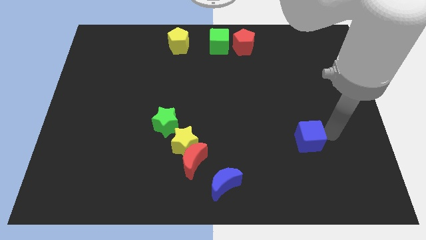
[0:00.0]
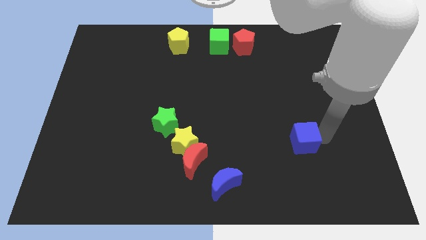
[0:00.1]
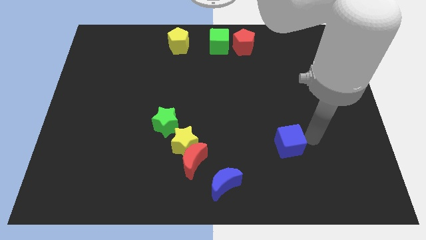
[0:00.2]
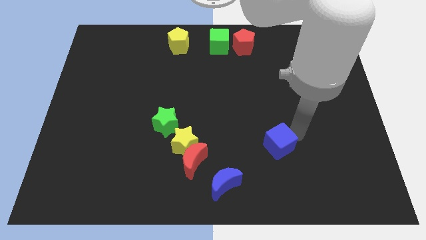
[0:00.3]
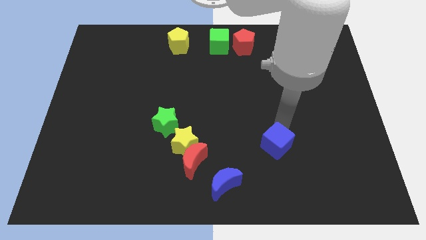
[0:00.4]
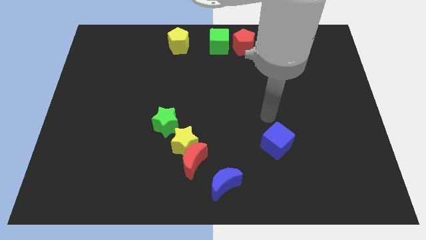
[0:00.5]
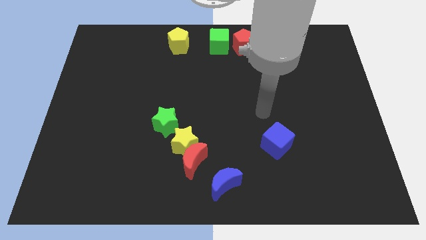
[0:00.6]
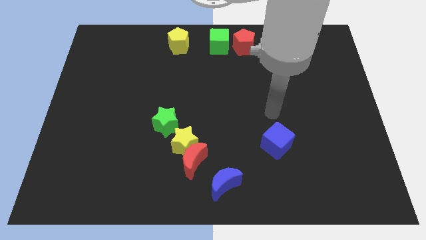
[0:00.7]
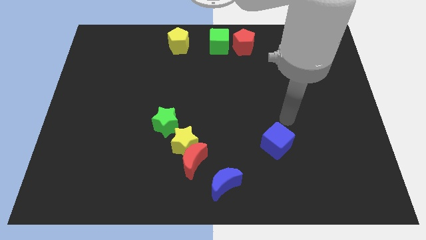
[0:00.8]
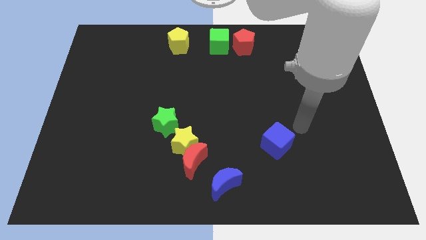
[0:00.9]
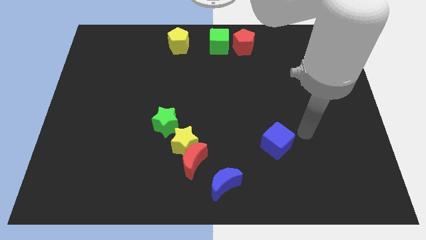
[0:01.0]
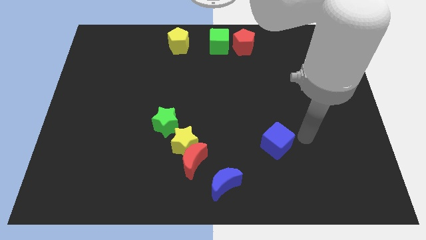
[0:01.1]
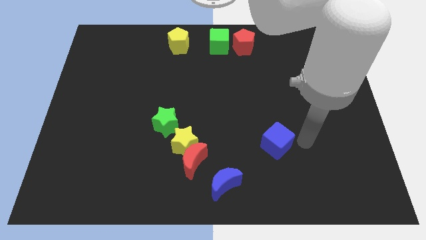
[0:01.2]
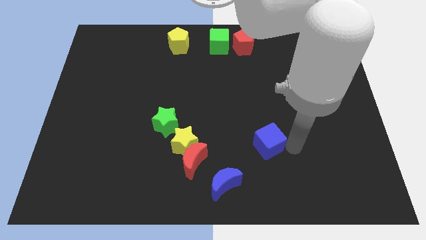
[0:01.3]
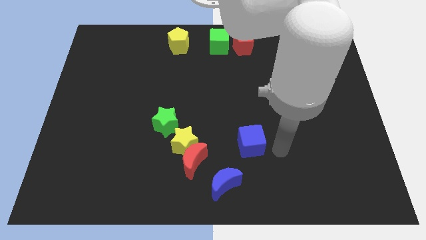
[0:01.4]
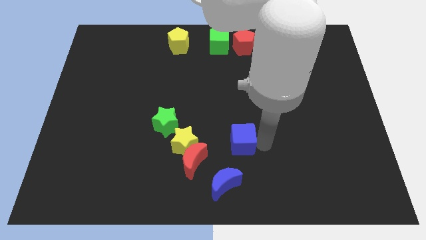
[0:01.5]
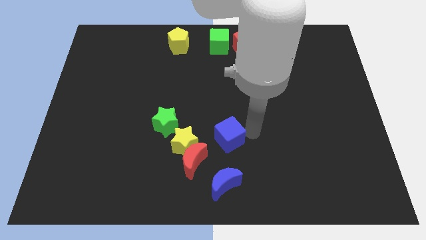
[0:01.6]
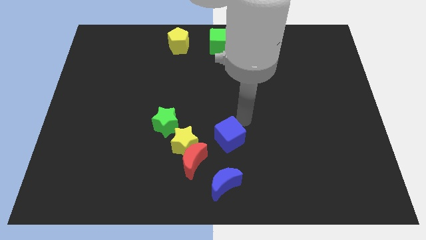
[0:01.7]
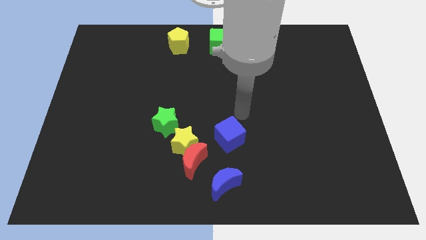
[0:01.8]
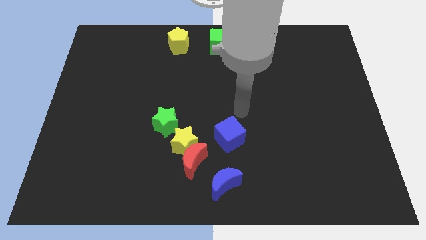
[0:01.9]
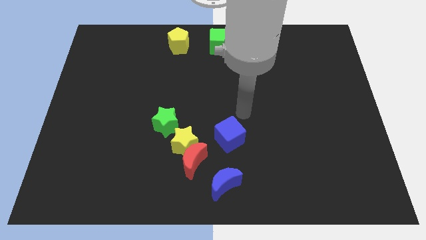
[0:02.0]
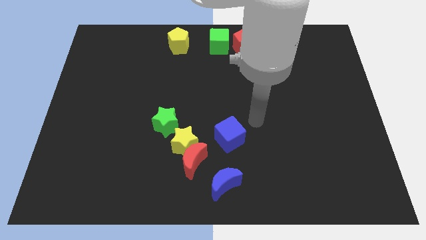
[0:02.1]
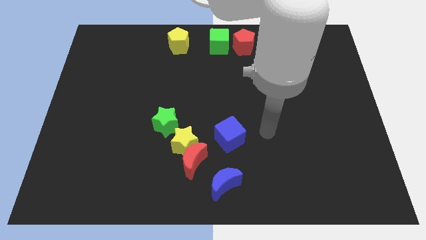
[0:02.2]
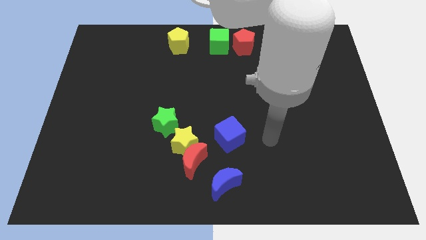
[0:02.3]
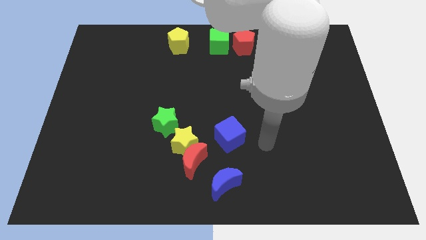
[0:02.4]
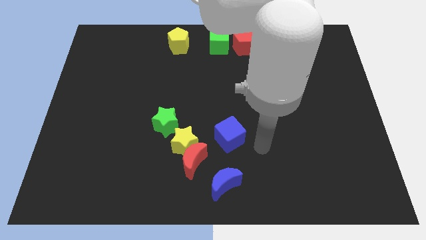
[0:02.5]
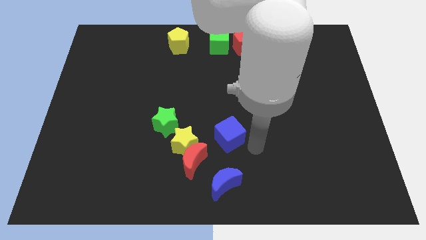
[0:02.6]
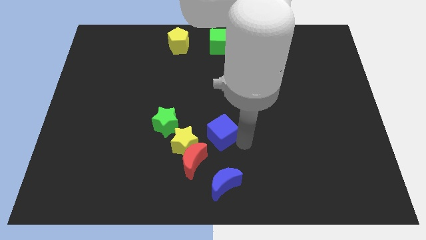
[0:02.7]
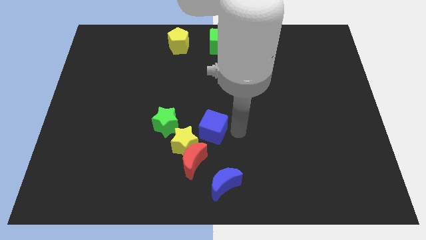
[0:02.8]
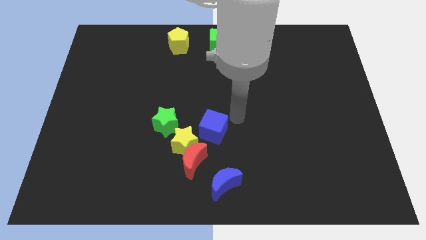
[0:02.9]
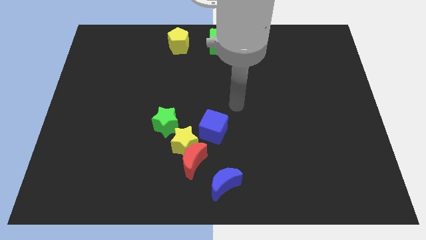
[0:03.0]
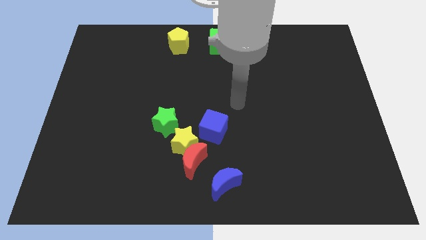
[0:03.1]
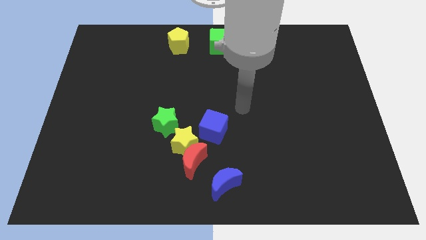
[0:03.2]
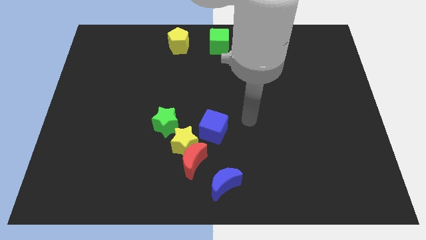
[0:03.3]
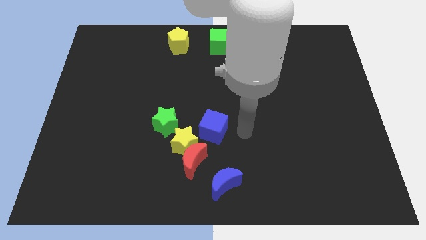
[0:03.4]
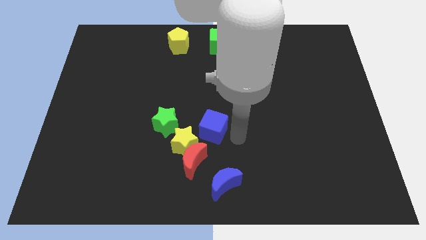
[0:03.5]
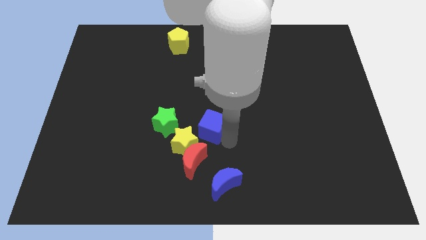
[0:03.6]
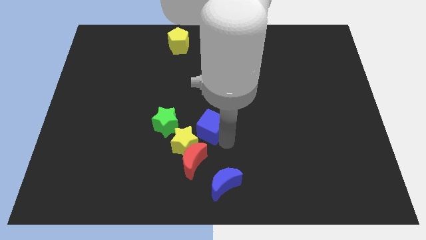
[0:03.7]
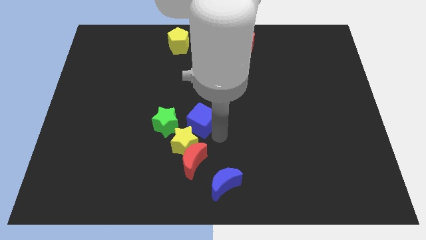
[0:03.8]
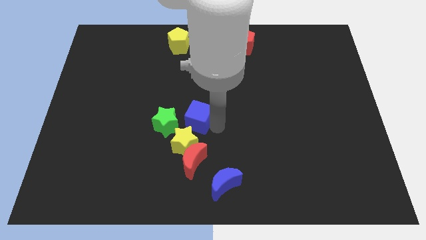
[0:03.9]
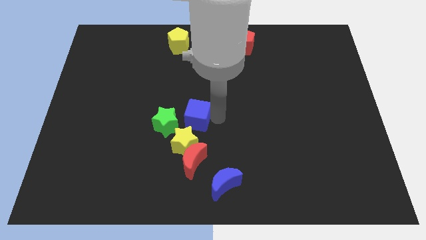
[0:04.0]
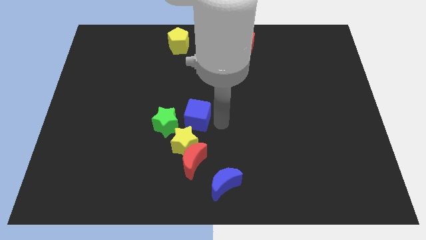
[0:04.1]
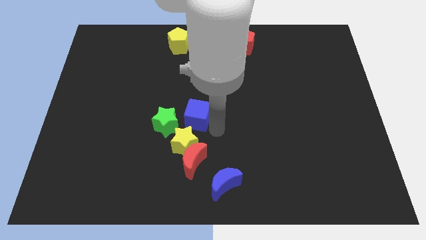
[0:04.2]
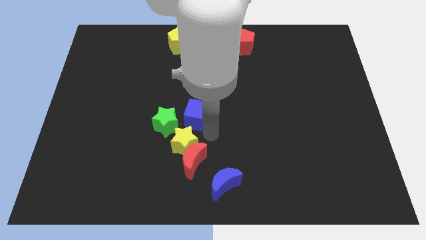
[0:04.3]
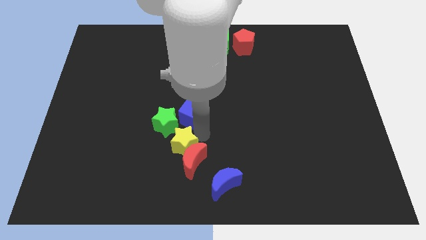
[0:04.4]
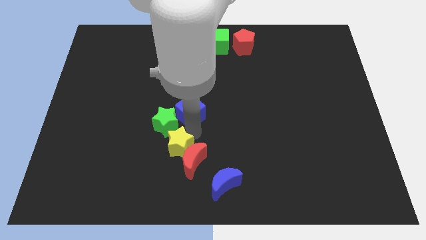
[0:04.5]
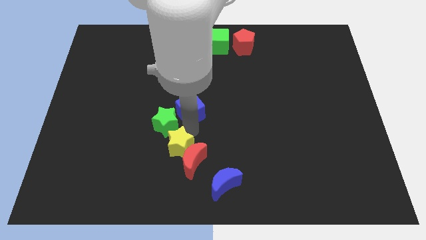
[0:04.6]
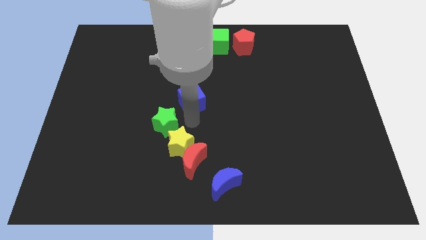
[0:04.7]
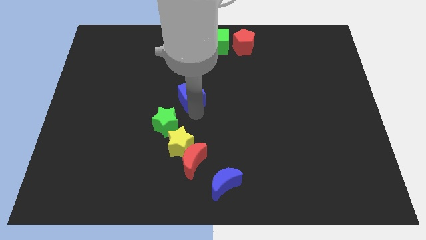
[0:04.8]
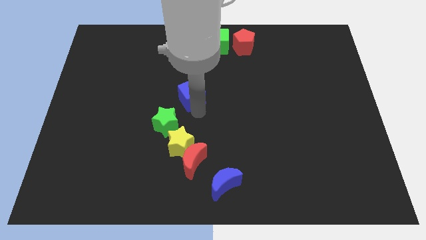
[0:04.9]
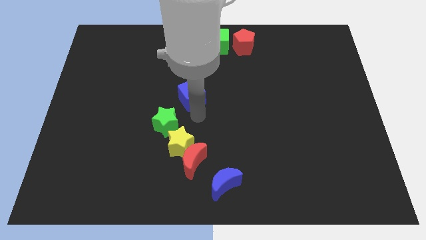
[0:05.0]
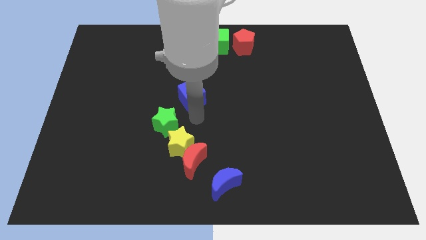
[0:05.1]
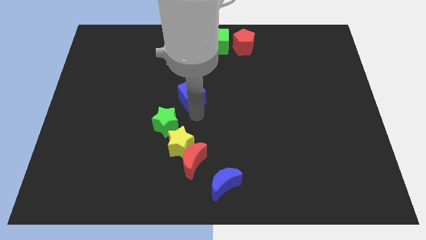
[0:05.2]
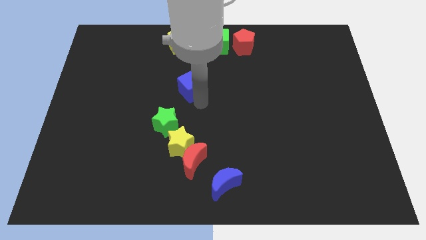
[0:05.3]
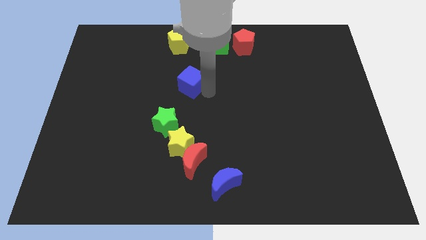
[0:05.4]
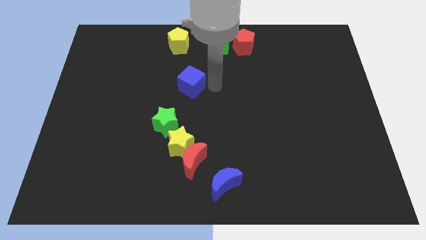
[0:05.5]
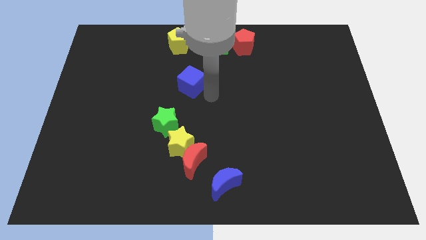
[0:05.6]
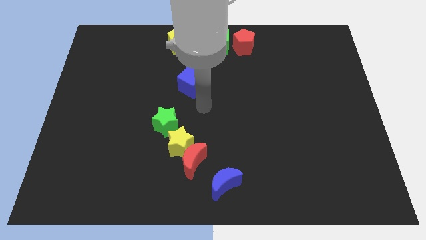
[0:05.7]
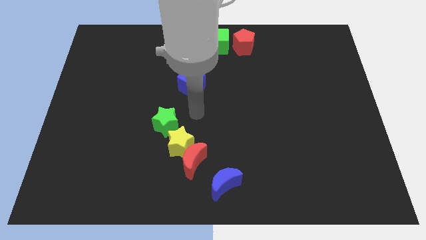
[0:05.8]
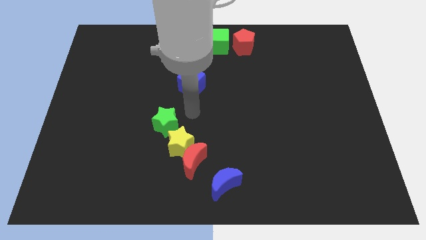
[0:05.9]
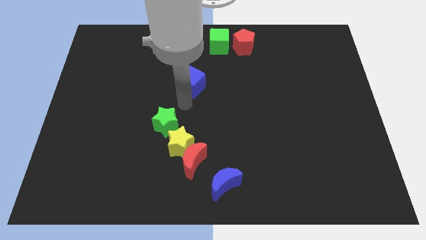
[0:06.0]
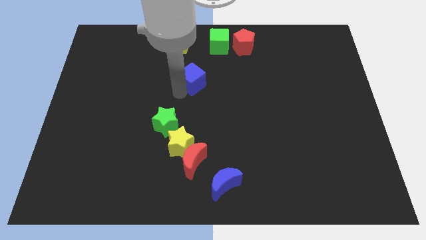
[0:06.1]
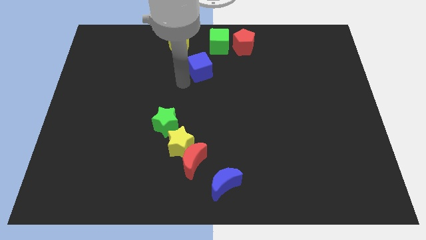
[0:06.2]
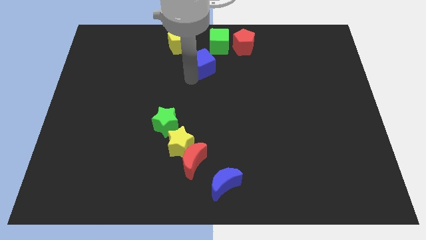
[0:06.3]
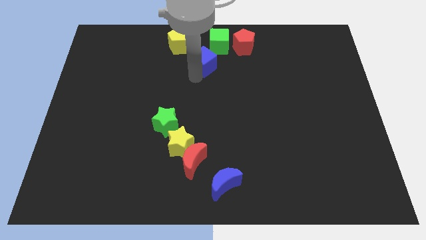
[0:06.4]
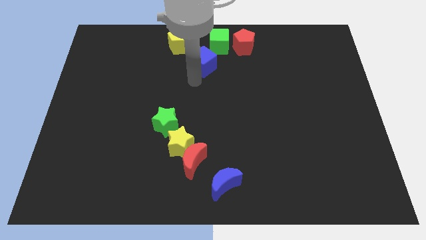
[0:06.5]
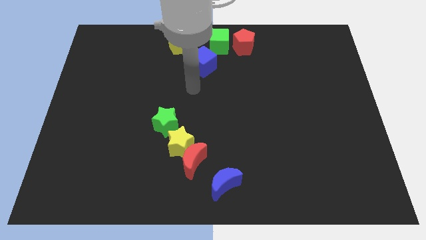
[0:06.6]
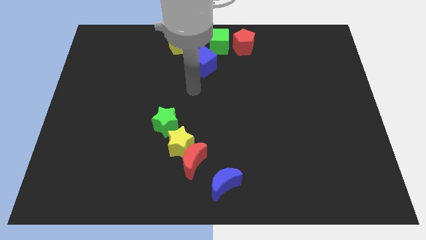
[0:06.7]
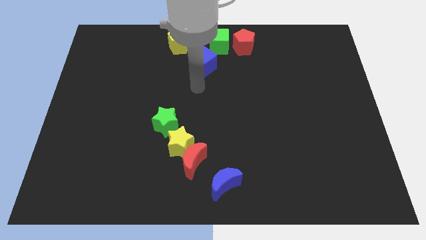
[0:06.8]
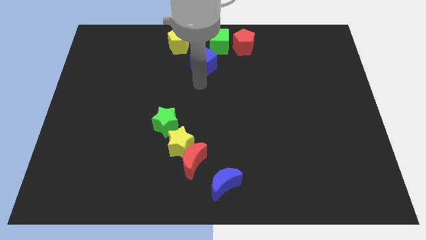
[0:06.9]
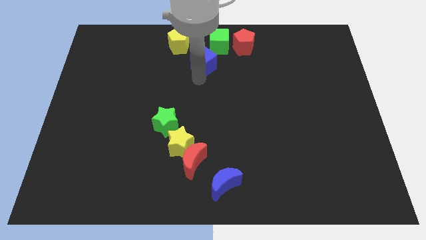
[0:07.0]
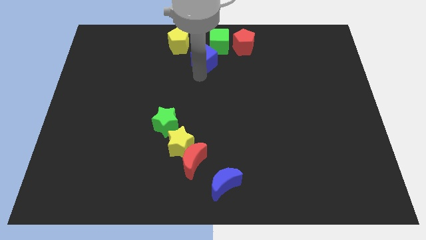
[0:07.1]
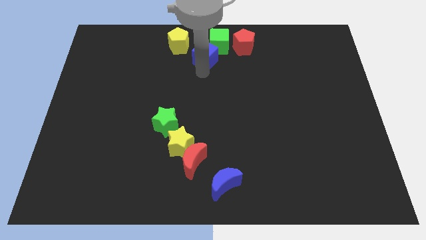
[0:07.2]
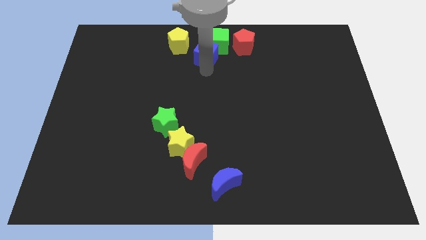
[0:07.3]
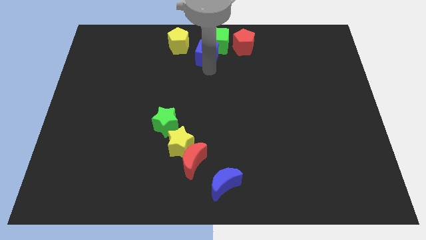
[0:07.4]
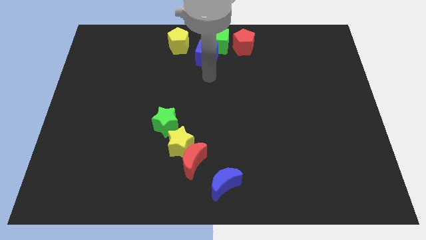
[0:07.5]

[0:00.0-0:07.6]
push the blue cube towards the green cube

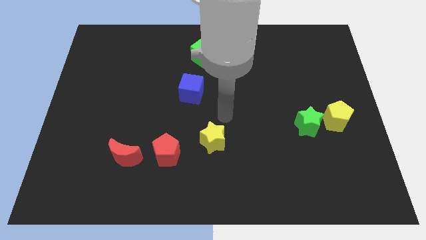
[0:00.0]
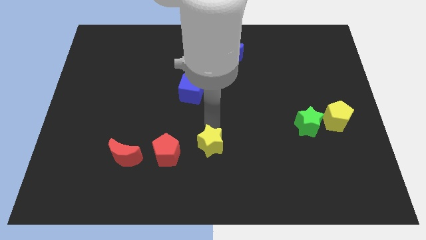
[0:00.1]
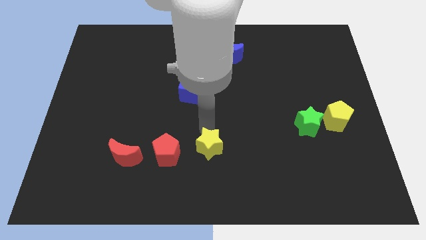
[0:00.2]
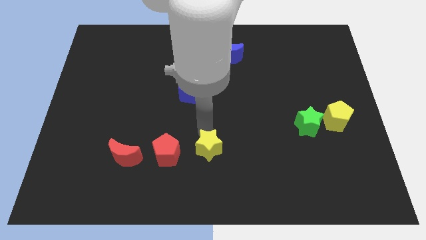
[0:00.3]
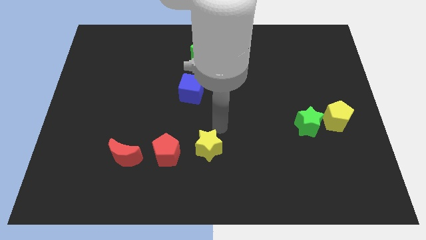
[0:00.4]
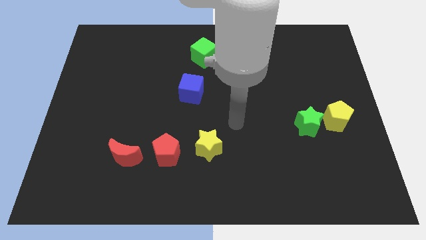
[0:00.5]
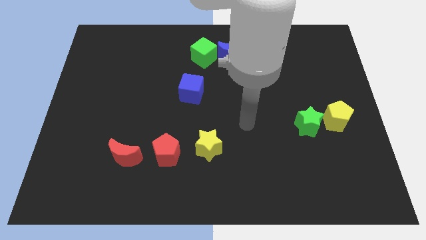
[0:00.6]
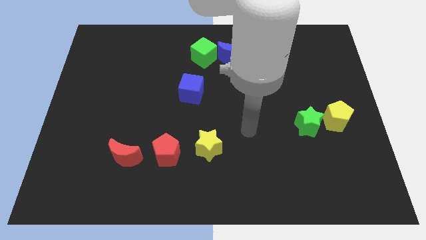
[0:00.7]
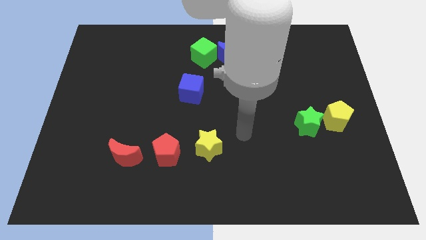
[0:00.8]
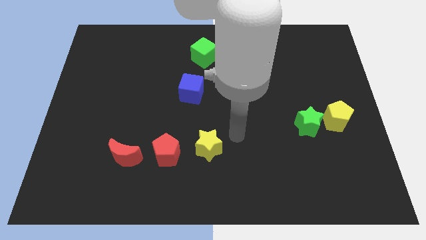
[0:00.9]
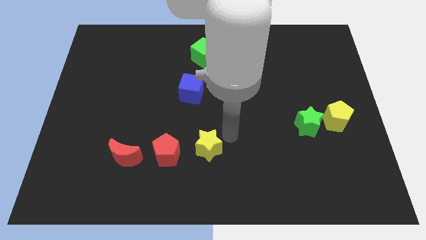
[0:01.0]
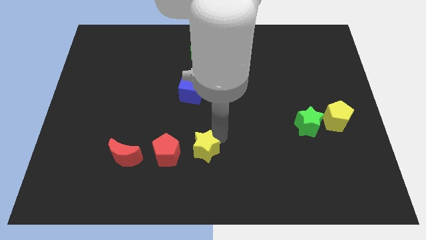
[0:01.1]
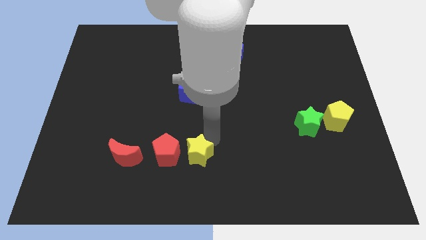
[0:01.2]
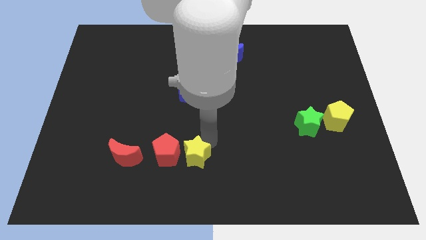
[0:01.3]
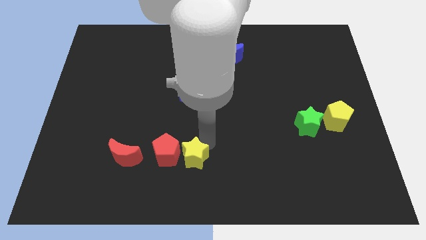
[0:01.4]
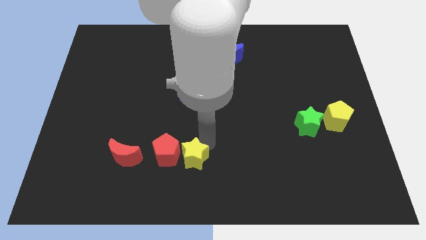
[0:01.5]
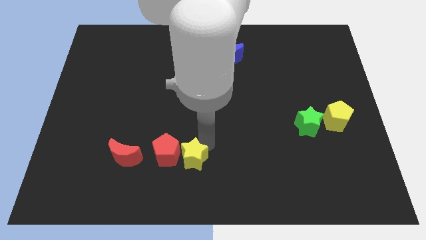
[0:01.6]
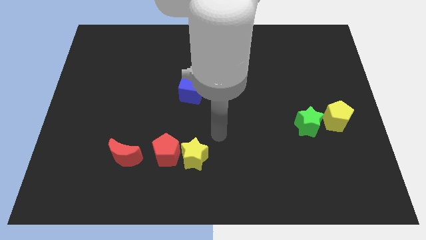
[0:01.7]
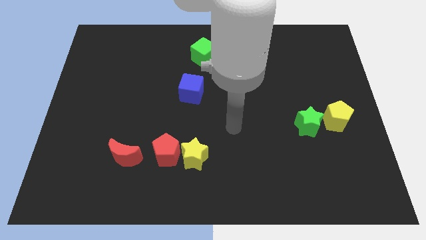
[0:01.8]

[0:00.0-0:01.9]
place the yellow star to the right of the red pentagon
